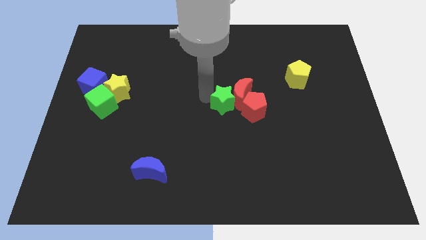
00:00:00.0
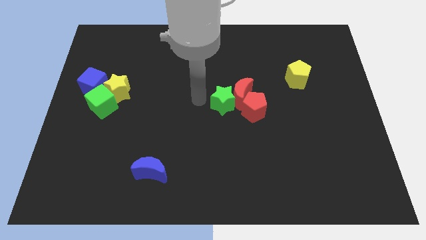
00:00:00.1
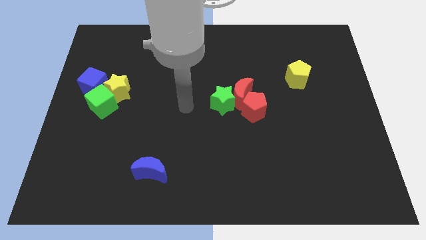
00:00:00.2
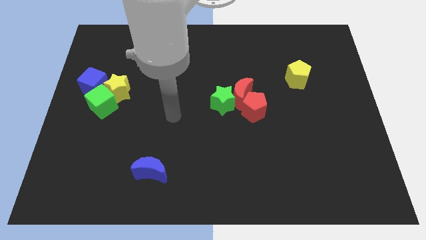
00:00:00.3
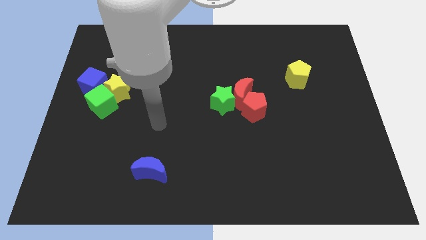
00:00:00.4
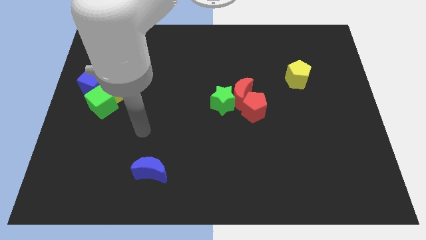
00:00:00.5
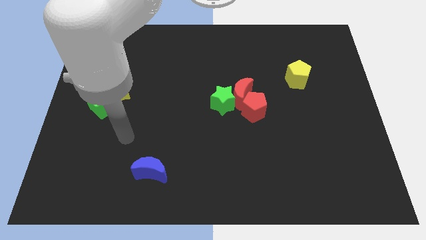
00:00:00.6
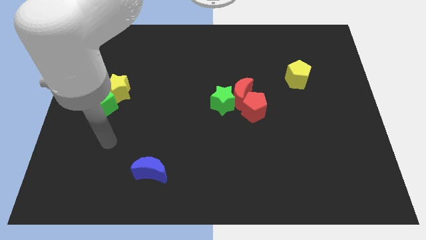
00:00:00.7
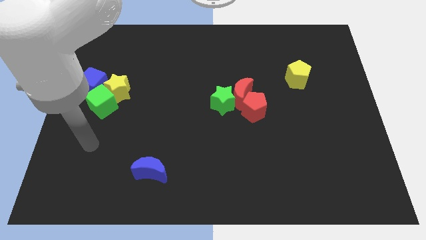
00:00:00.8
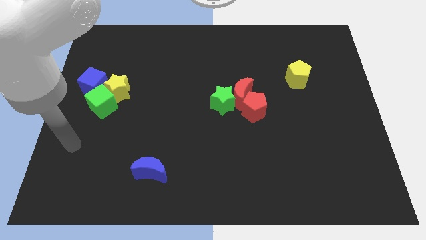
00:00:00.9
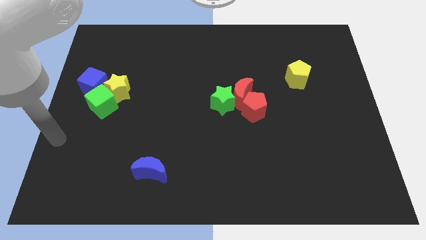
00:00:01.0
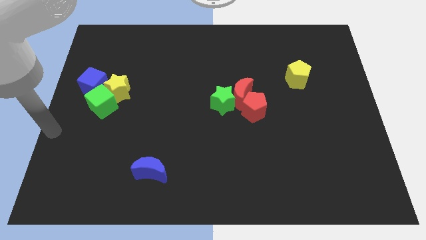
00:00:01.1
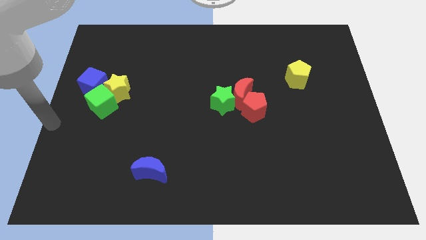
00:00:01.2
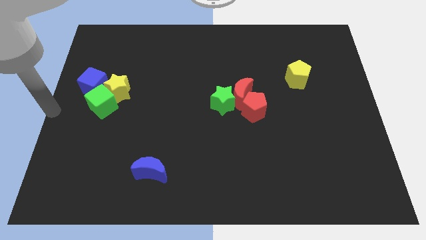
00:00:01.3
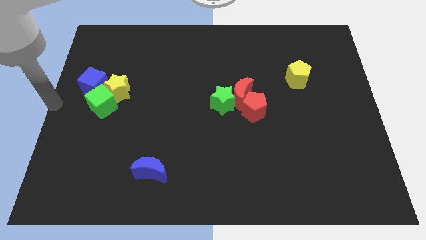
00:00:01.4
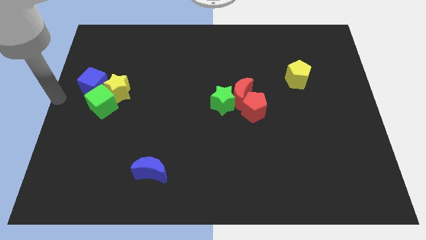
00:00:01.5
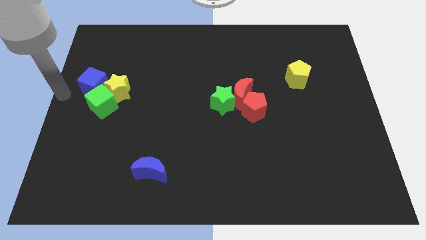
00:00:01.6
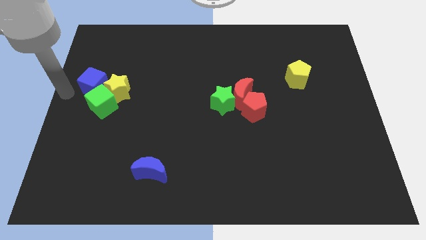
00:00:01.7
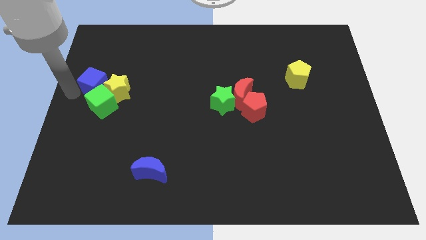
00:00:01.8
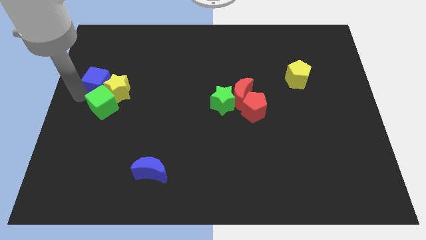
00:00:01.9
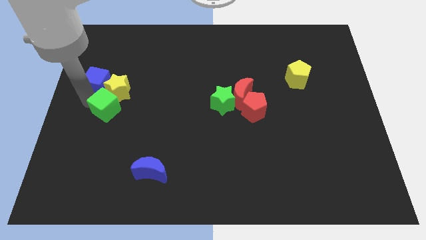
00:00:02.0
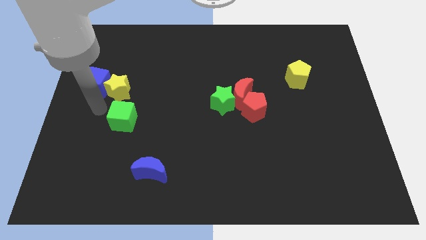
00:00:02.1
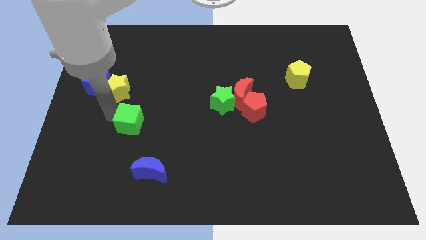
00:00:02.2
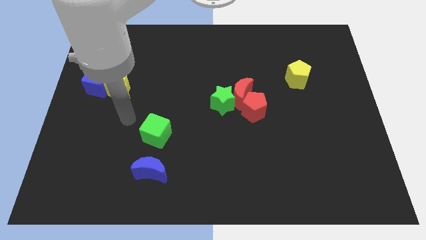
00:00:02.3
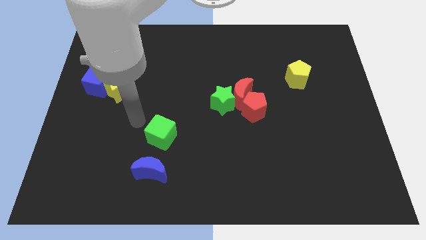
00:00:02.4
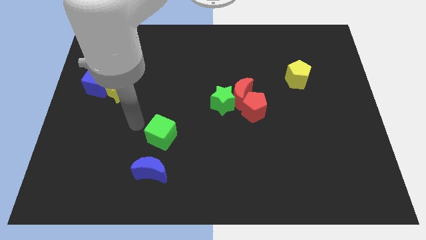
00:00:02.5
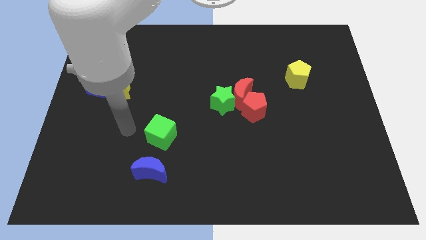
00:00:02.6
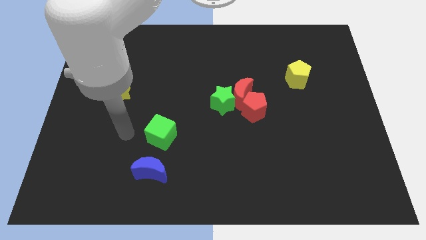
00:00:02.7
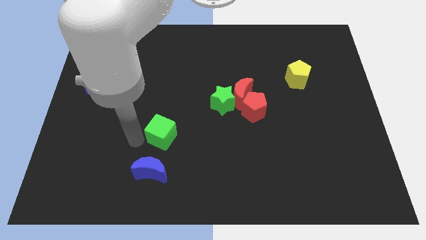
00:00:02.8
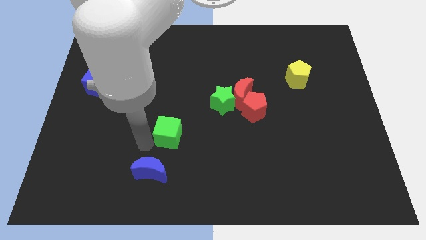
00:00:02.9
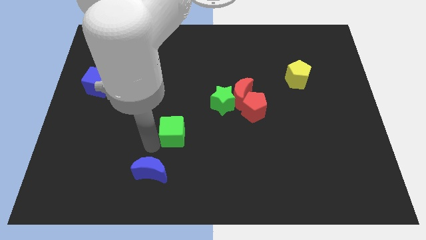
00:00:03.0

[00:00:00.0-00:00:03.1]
place green cube in between green star and blue moon

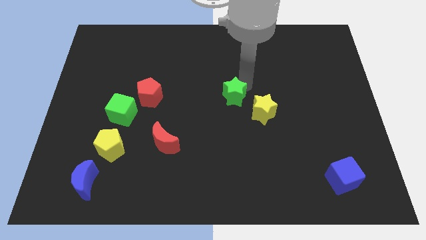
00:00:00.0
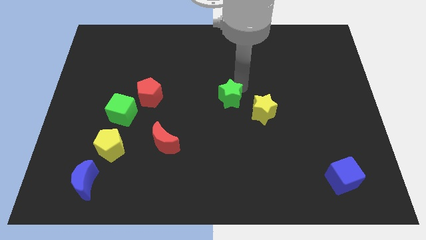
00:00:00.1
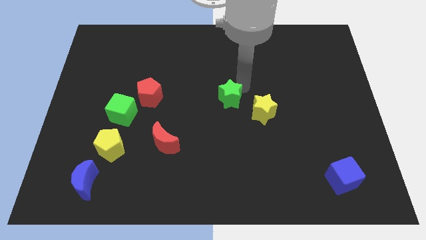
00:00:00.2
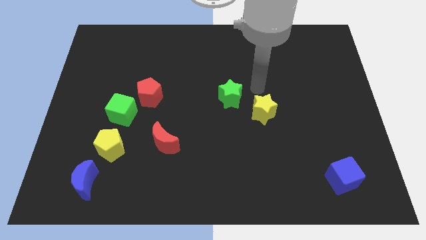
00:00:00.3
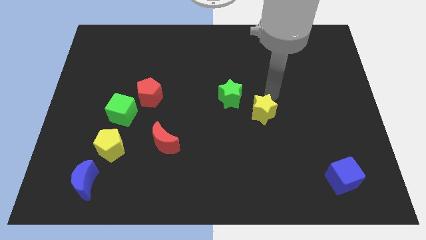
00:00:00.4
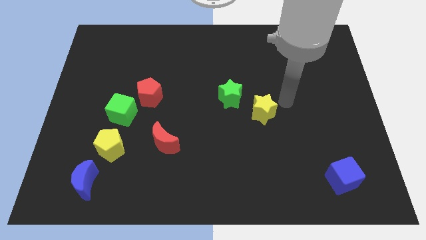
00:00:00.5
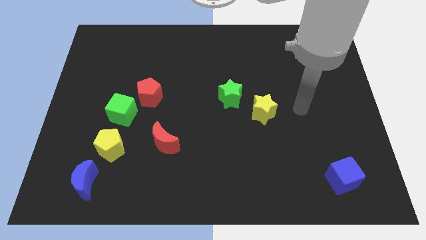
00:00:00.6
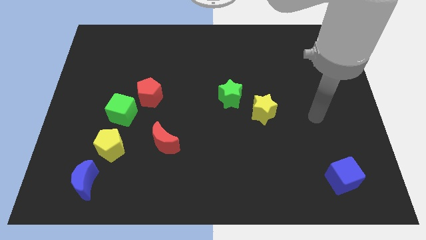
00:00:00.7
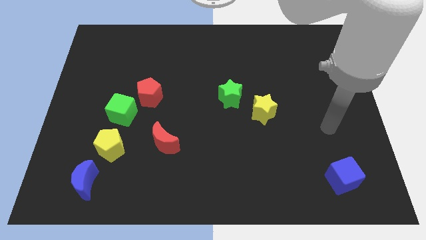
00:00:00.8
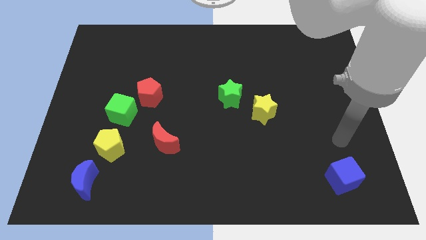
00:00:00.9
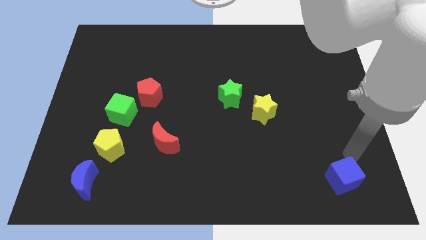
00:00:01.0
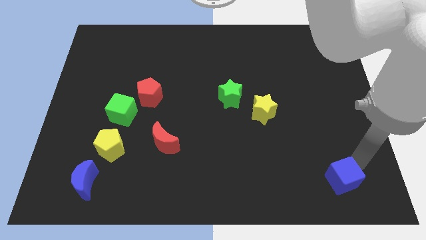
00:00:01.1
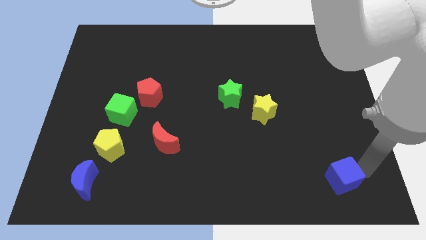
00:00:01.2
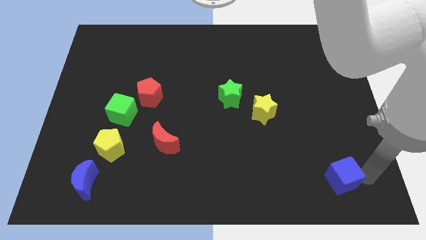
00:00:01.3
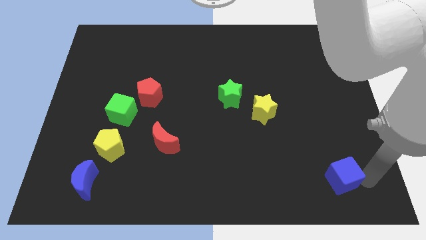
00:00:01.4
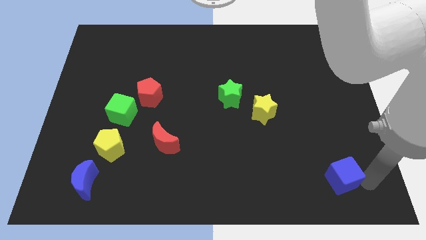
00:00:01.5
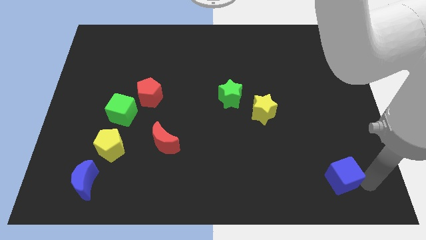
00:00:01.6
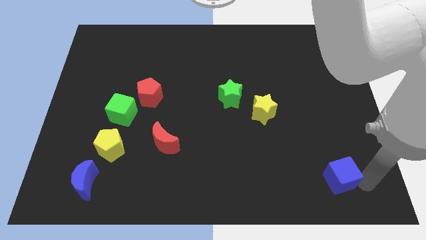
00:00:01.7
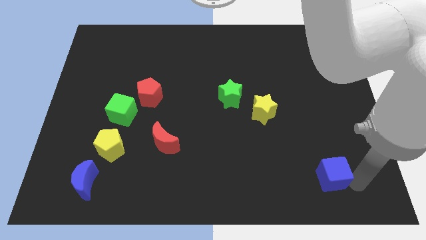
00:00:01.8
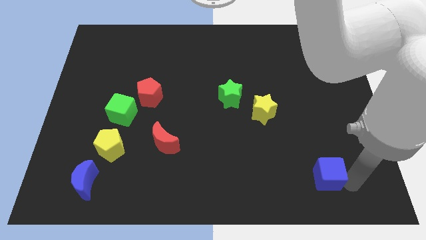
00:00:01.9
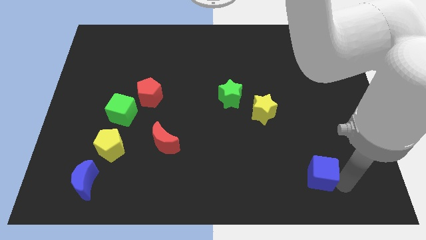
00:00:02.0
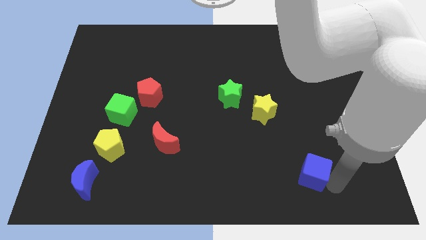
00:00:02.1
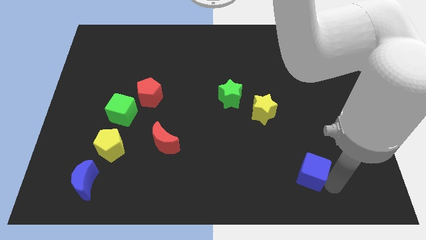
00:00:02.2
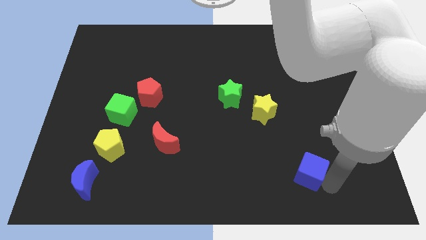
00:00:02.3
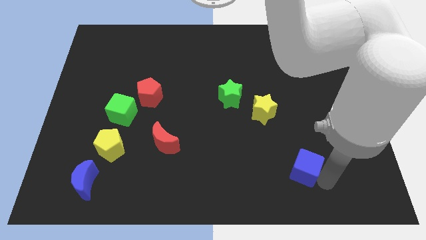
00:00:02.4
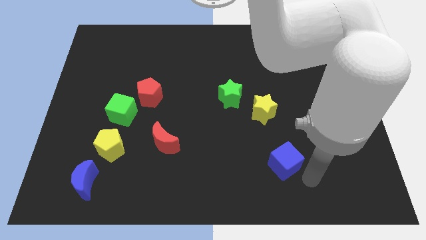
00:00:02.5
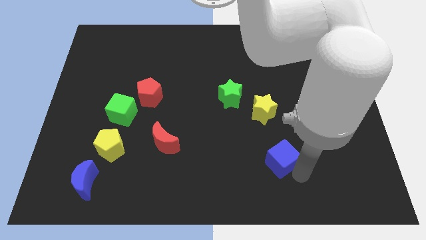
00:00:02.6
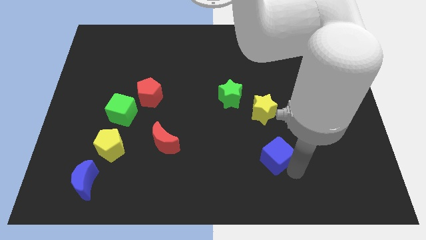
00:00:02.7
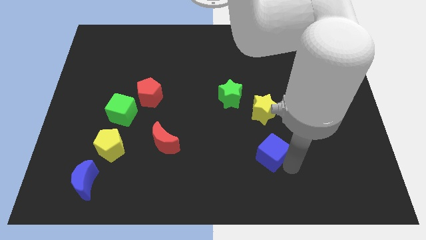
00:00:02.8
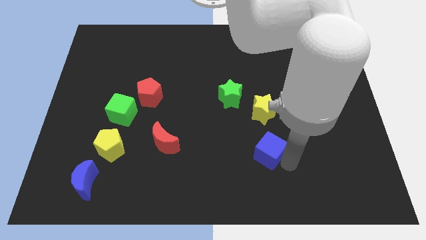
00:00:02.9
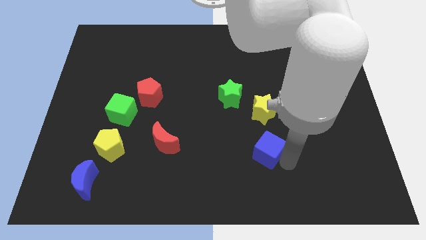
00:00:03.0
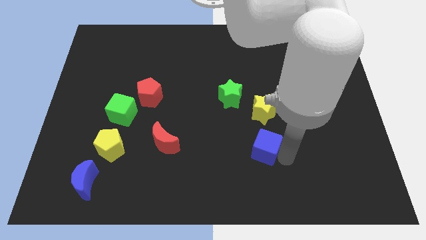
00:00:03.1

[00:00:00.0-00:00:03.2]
move the blue cube below the yellow star

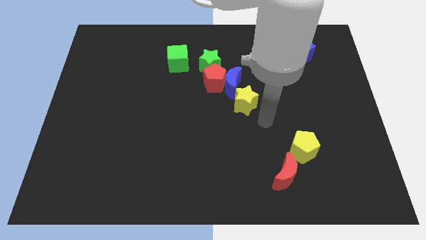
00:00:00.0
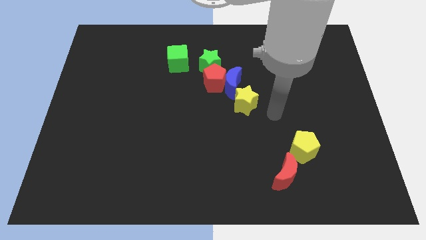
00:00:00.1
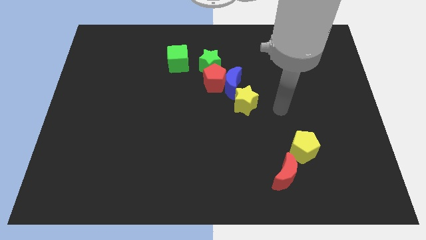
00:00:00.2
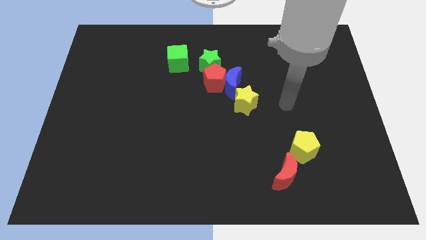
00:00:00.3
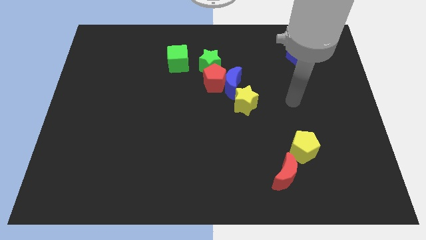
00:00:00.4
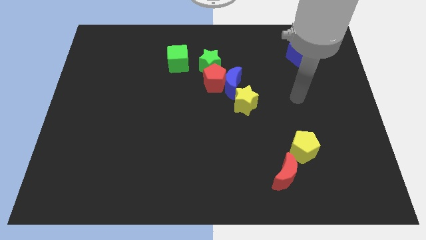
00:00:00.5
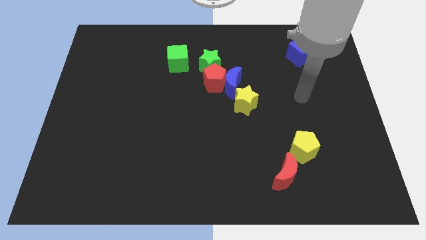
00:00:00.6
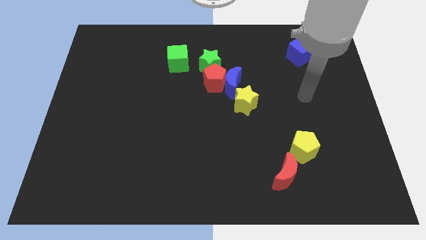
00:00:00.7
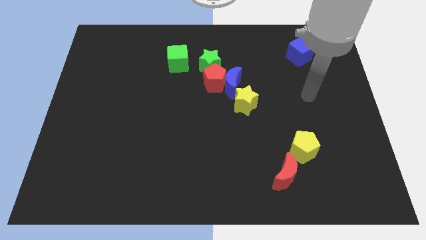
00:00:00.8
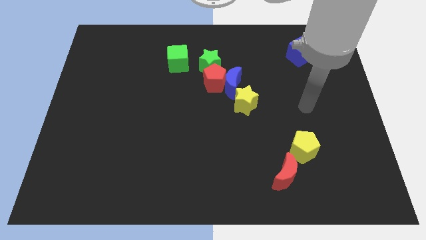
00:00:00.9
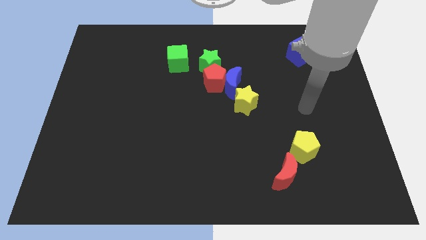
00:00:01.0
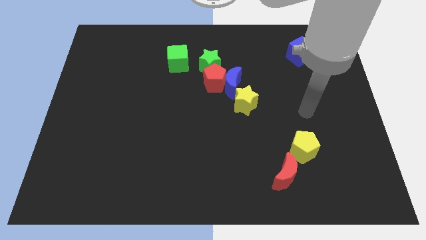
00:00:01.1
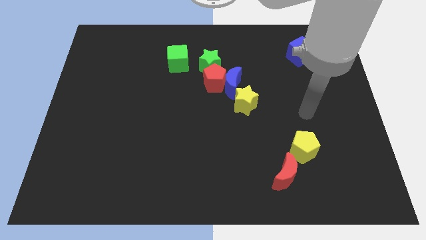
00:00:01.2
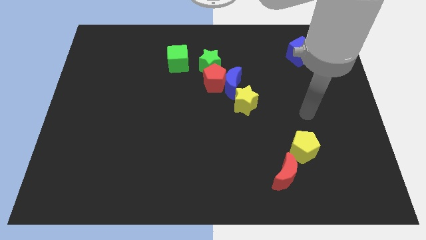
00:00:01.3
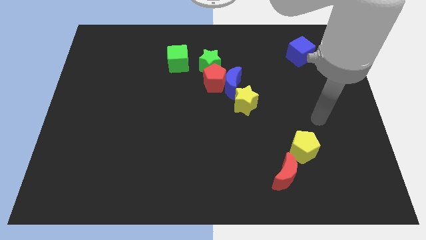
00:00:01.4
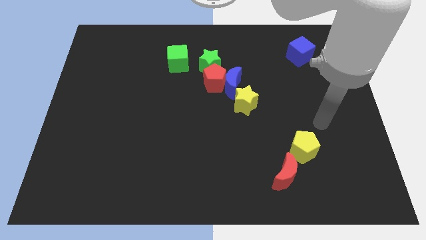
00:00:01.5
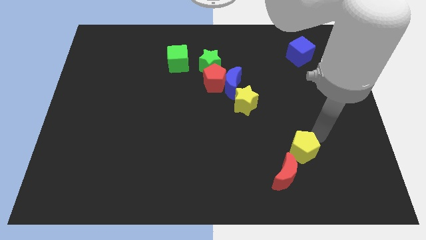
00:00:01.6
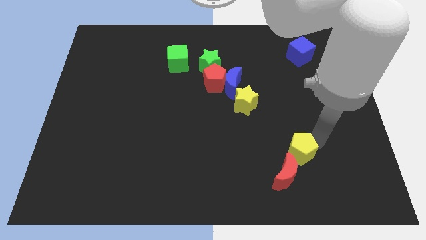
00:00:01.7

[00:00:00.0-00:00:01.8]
move your arm towards the yellow pentagon

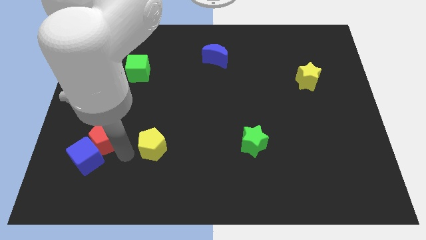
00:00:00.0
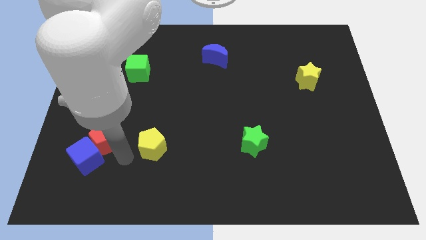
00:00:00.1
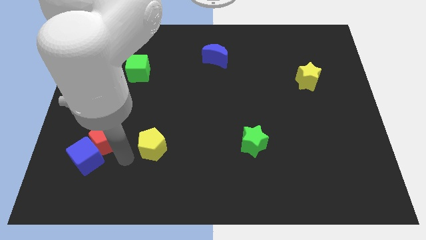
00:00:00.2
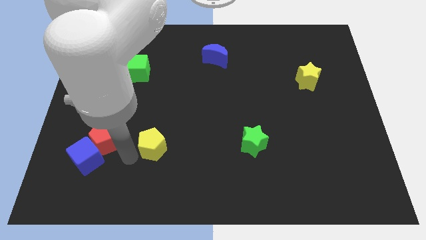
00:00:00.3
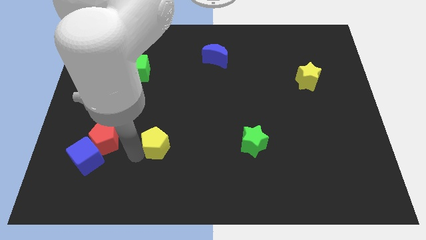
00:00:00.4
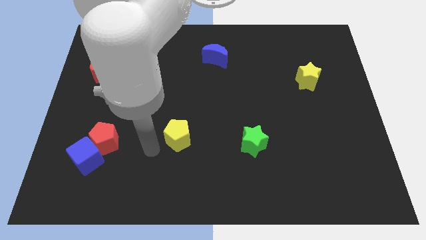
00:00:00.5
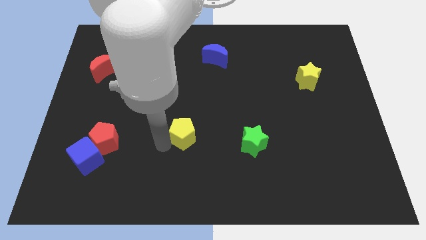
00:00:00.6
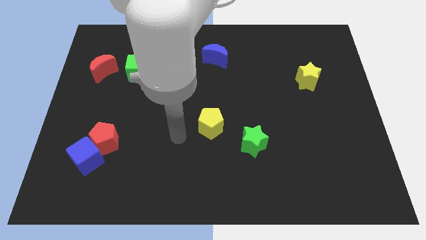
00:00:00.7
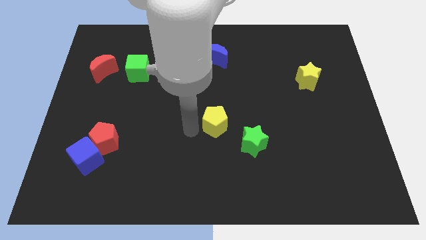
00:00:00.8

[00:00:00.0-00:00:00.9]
place the yellow pentagon diagonally top left to green star
